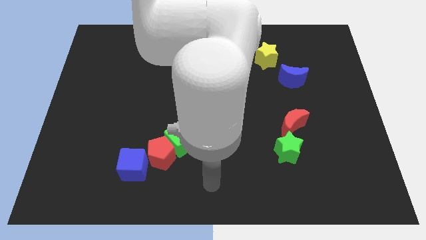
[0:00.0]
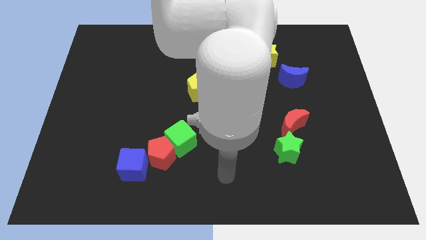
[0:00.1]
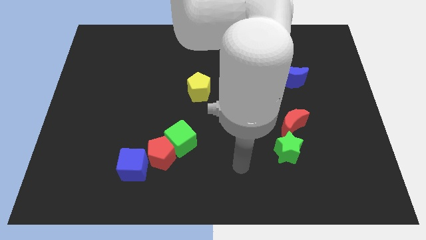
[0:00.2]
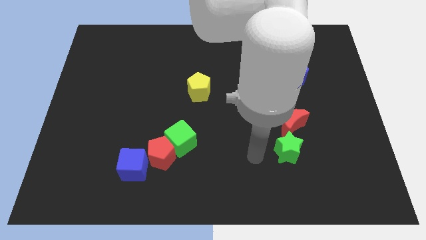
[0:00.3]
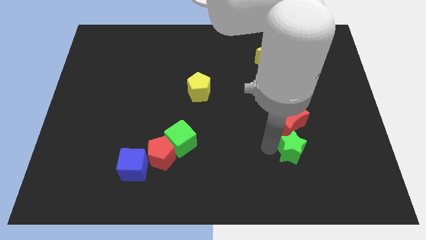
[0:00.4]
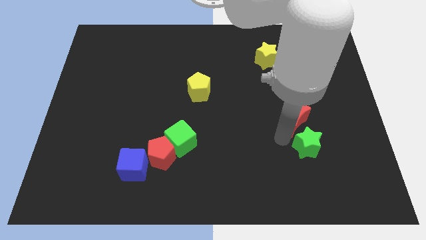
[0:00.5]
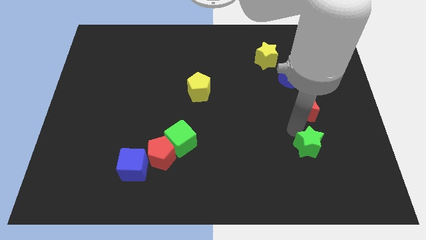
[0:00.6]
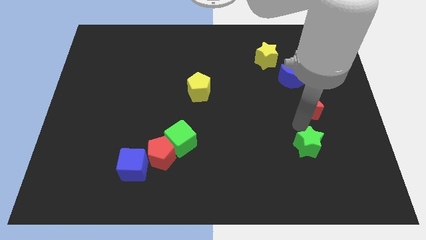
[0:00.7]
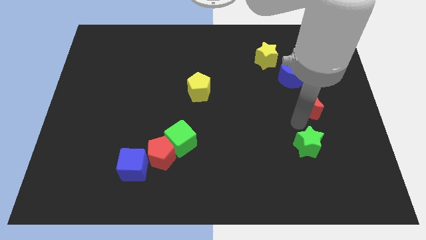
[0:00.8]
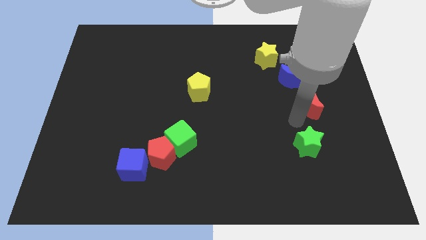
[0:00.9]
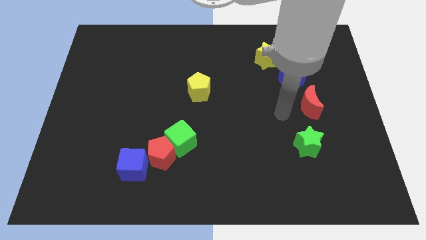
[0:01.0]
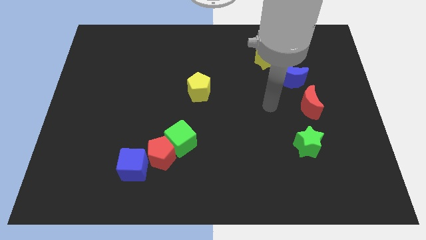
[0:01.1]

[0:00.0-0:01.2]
separate the red moon and the green star

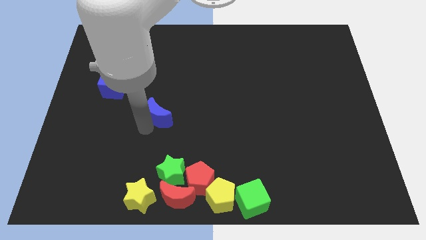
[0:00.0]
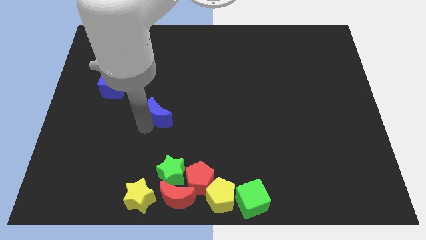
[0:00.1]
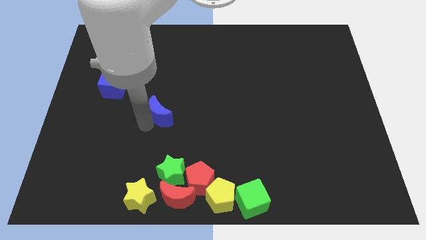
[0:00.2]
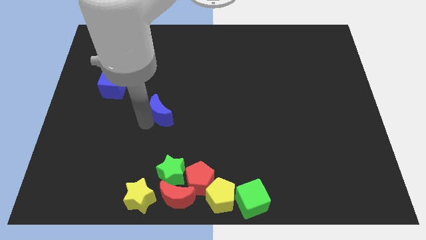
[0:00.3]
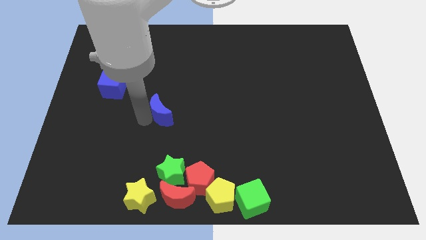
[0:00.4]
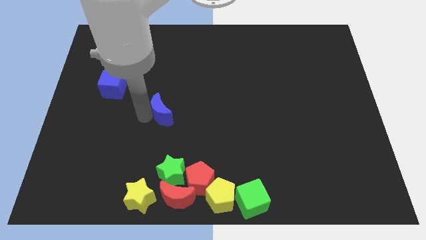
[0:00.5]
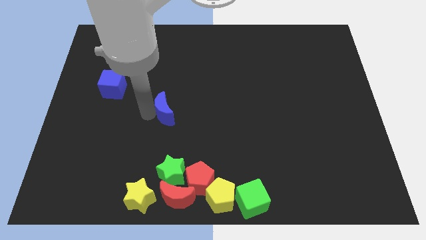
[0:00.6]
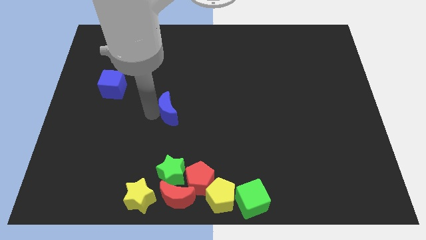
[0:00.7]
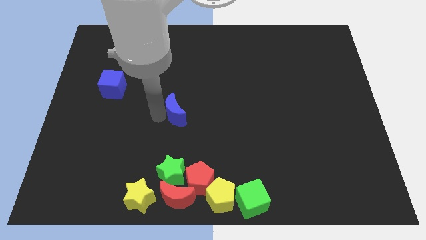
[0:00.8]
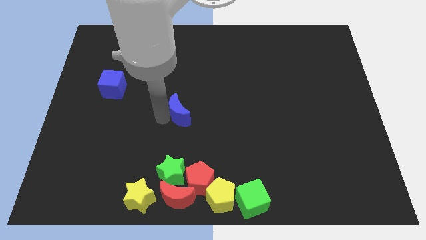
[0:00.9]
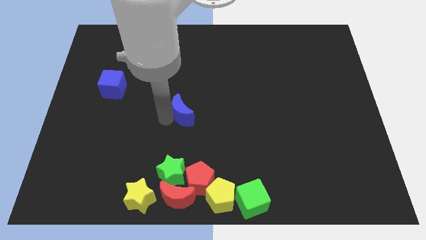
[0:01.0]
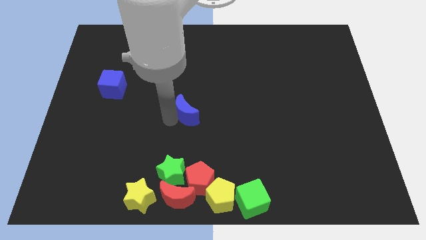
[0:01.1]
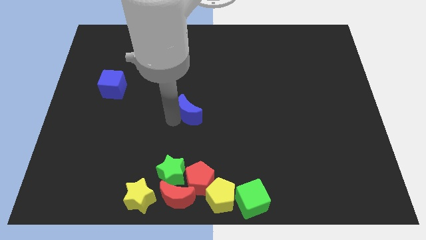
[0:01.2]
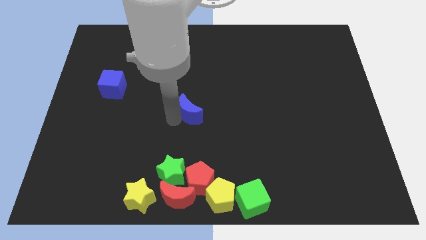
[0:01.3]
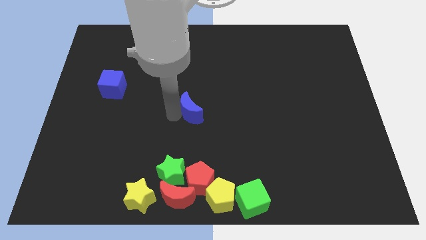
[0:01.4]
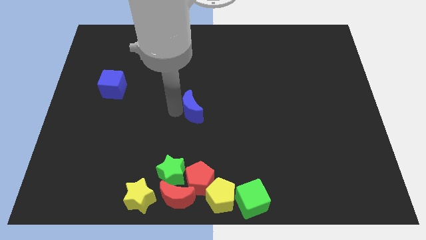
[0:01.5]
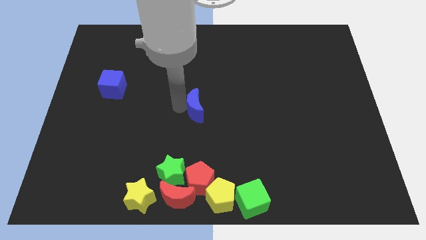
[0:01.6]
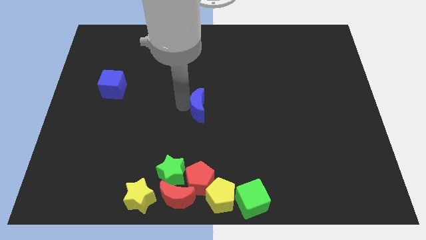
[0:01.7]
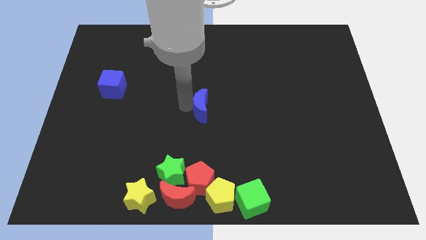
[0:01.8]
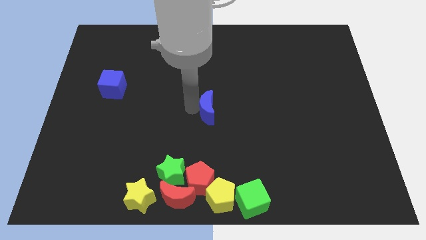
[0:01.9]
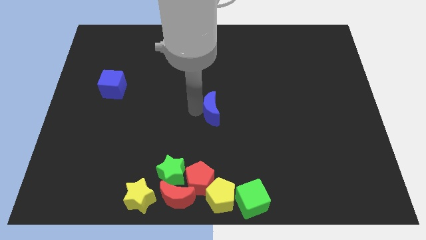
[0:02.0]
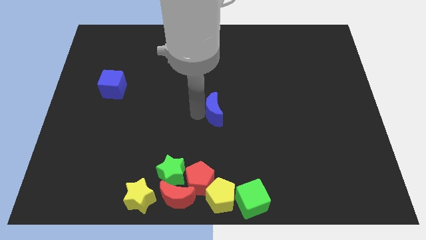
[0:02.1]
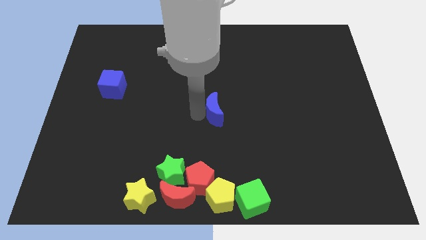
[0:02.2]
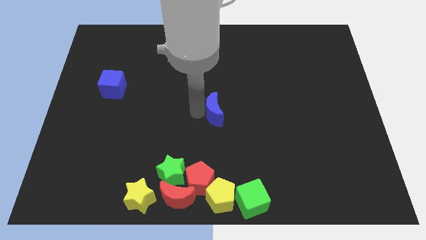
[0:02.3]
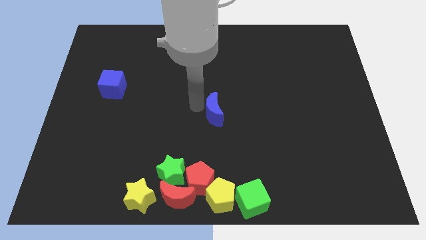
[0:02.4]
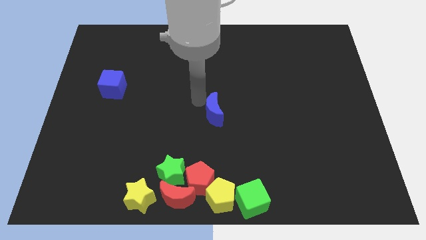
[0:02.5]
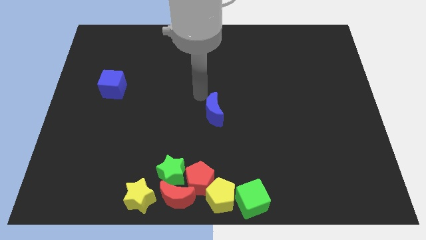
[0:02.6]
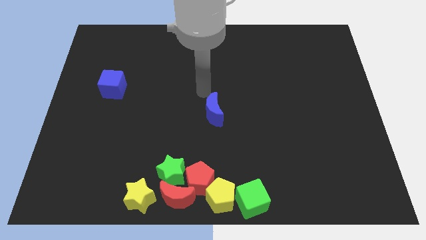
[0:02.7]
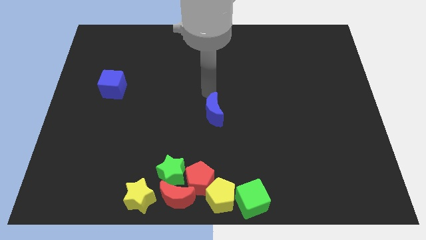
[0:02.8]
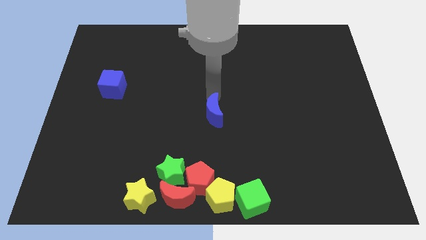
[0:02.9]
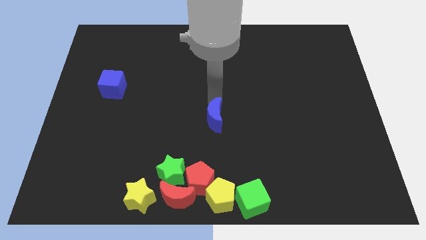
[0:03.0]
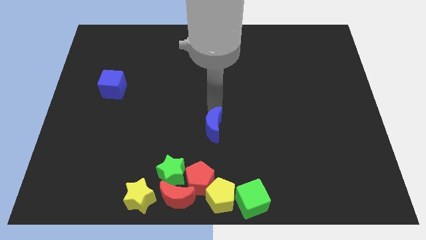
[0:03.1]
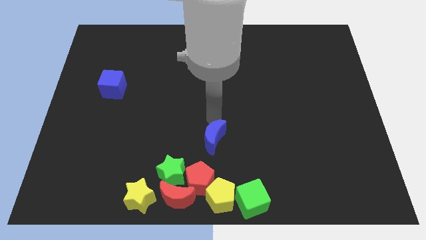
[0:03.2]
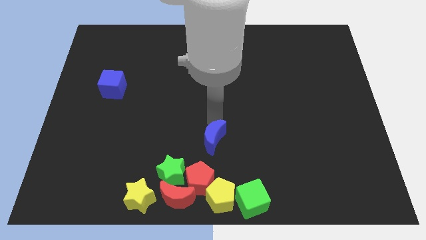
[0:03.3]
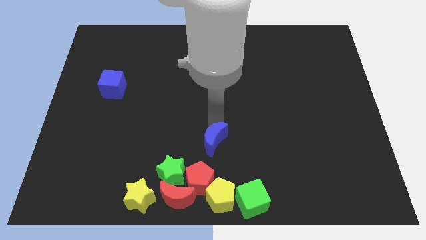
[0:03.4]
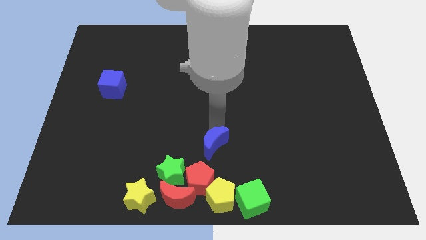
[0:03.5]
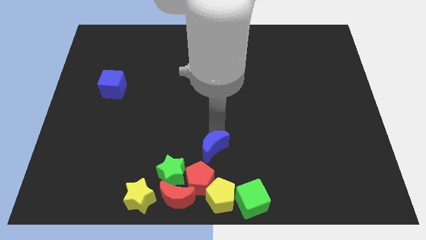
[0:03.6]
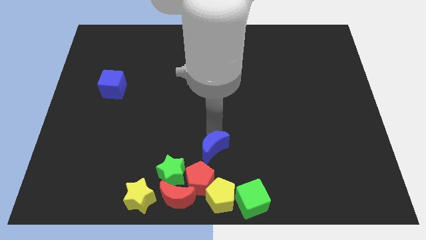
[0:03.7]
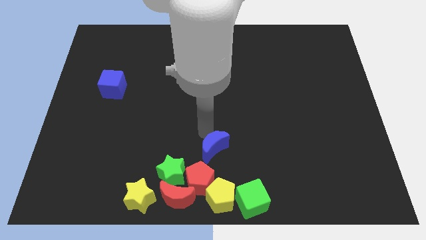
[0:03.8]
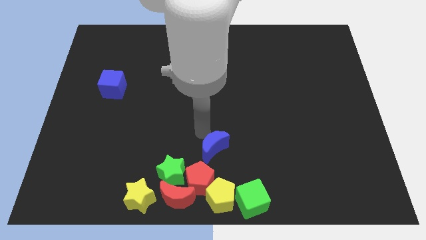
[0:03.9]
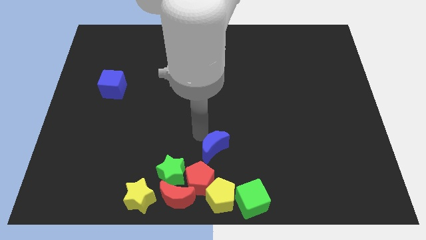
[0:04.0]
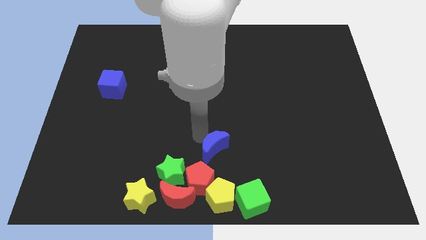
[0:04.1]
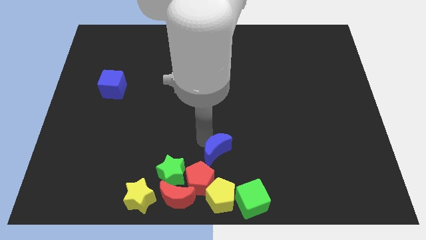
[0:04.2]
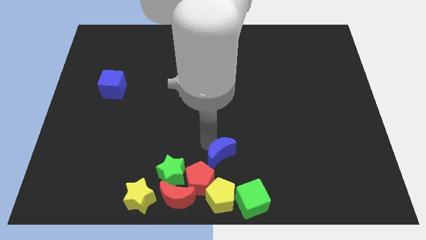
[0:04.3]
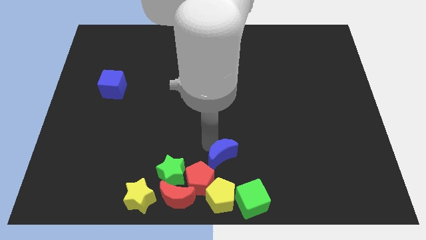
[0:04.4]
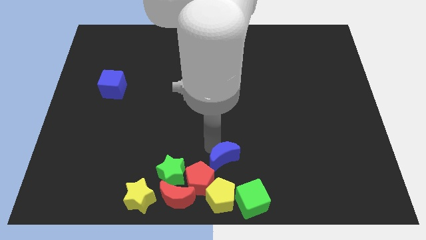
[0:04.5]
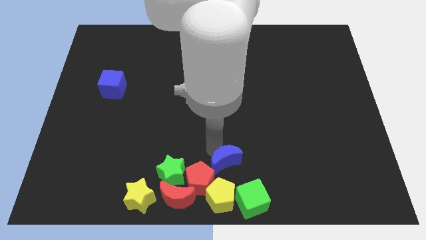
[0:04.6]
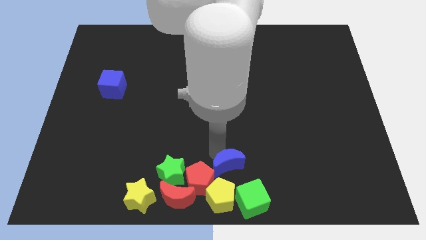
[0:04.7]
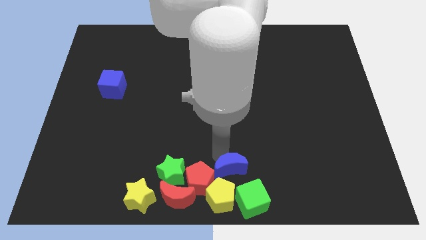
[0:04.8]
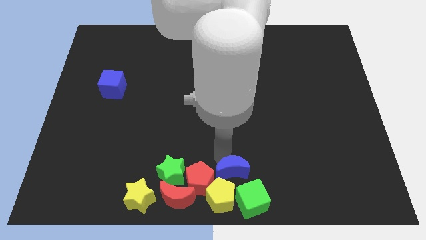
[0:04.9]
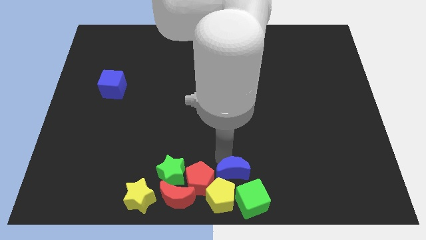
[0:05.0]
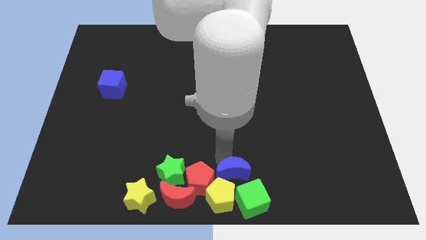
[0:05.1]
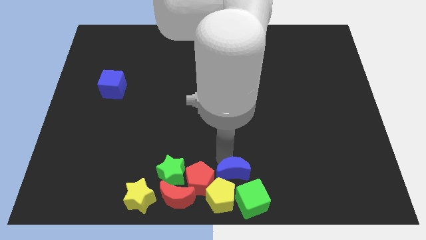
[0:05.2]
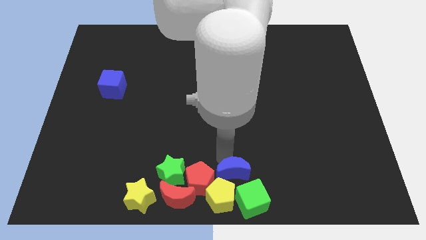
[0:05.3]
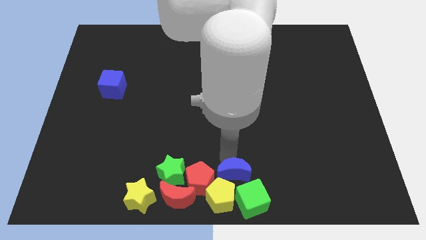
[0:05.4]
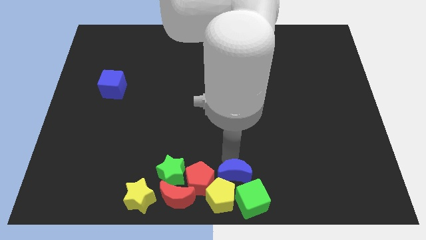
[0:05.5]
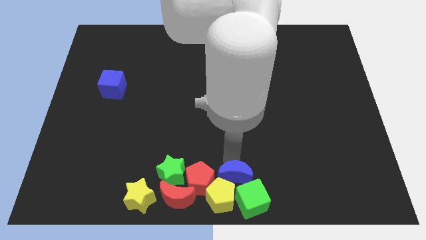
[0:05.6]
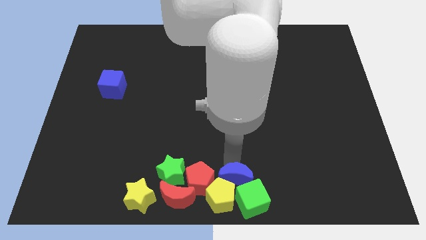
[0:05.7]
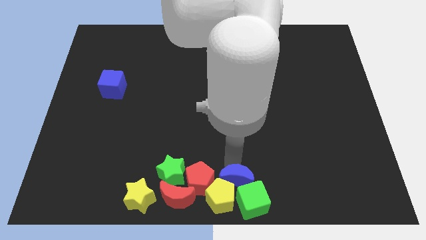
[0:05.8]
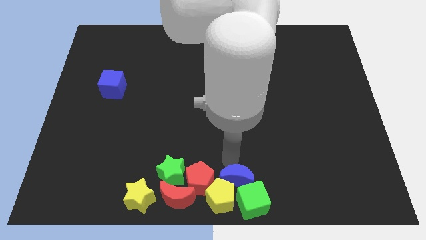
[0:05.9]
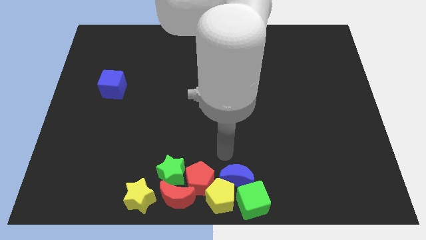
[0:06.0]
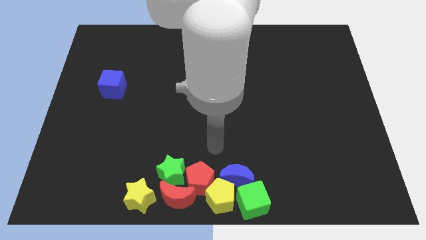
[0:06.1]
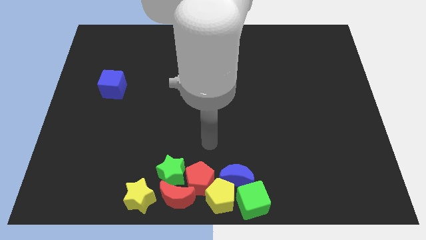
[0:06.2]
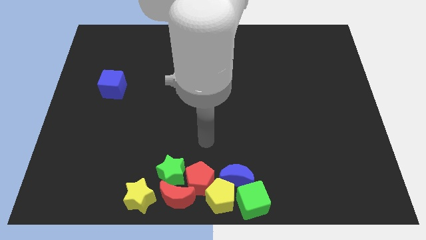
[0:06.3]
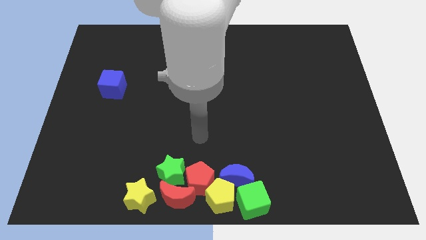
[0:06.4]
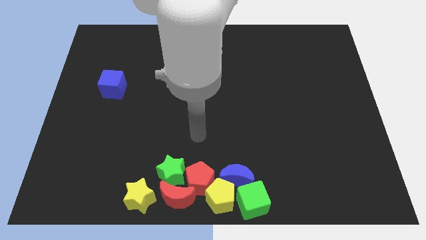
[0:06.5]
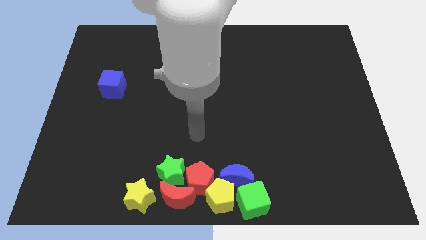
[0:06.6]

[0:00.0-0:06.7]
move the blue crescent above the yellow pentagon and green cube

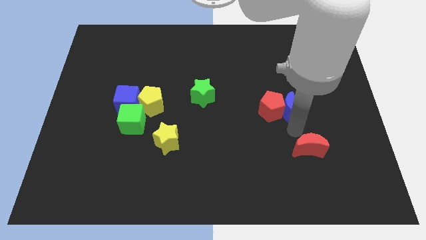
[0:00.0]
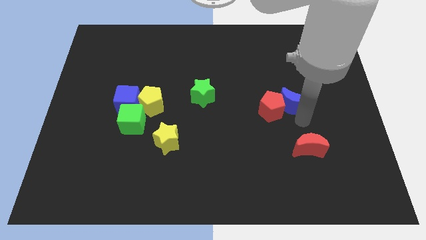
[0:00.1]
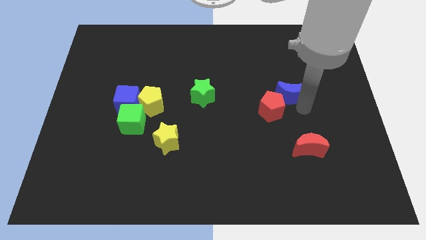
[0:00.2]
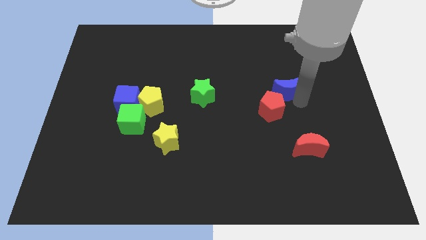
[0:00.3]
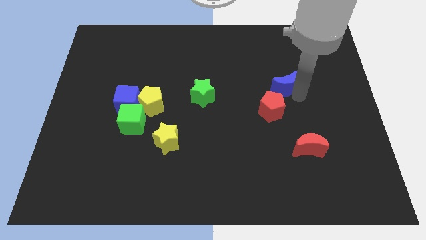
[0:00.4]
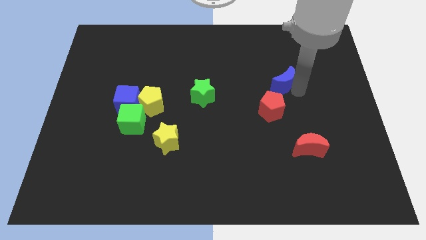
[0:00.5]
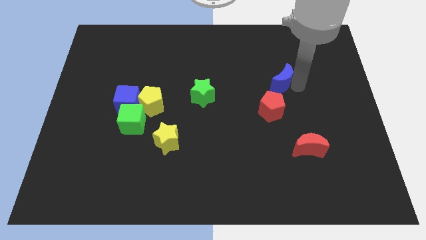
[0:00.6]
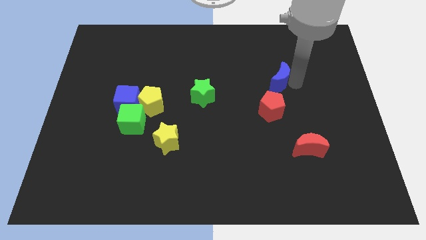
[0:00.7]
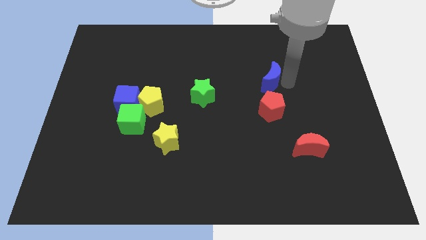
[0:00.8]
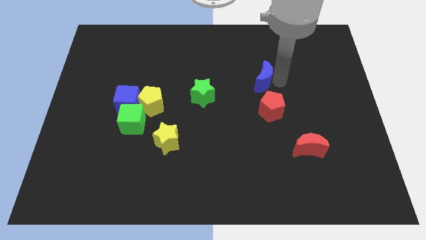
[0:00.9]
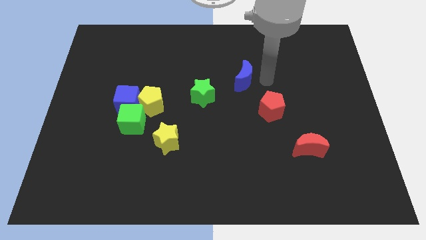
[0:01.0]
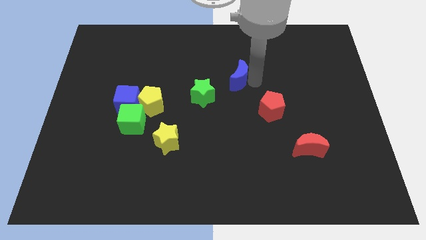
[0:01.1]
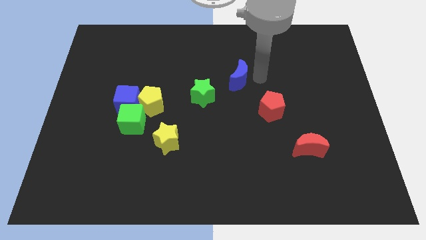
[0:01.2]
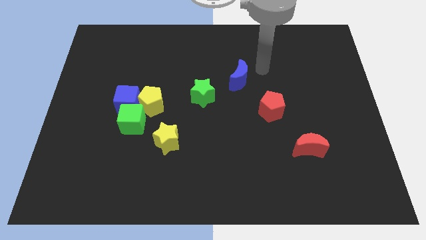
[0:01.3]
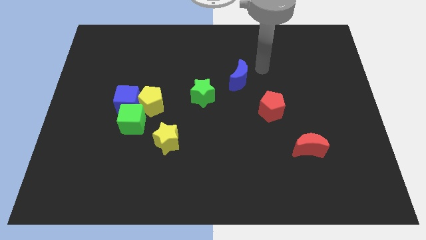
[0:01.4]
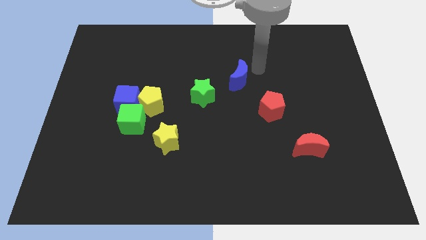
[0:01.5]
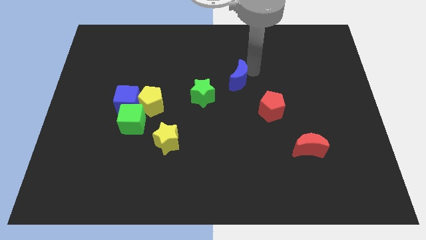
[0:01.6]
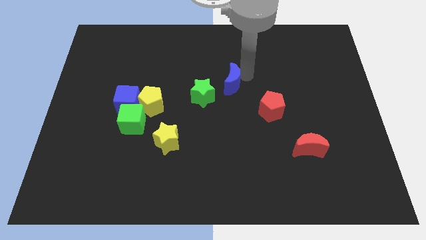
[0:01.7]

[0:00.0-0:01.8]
move the blue crescent to the center of the board
